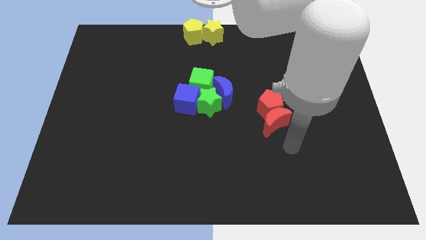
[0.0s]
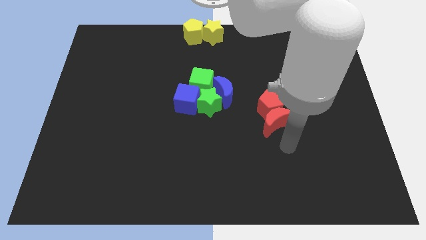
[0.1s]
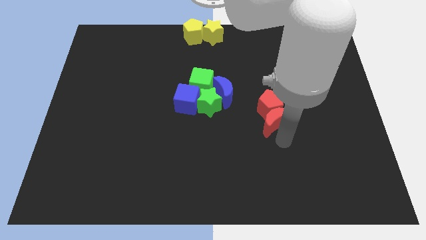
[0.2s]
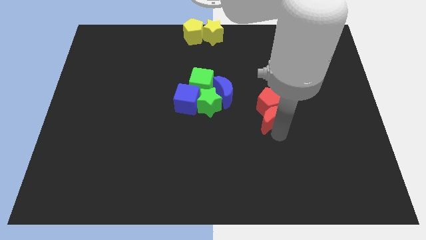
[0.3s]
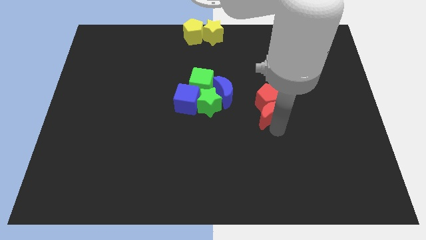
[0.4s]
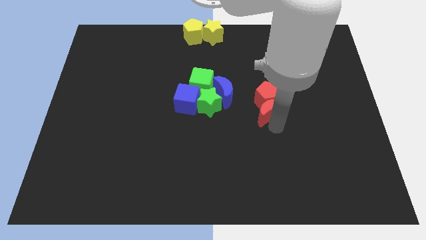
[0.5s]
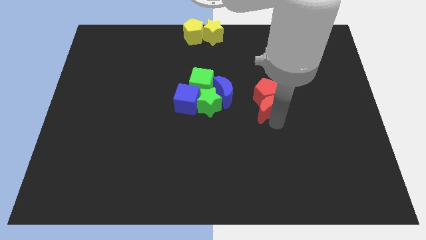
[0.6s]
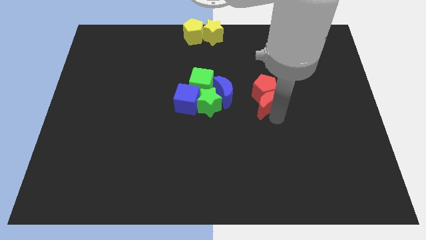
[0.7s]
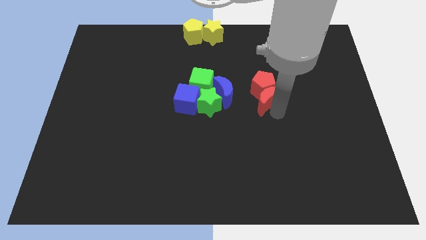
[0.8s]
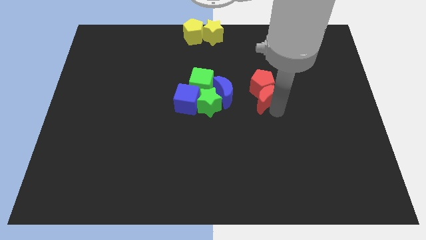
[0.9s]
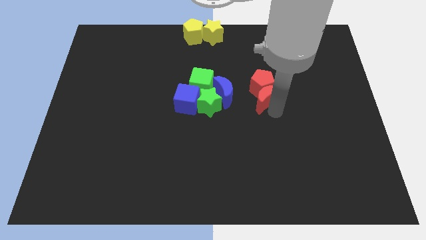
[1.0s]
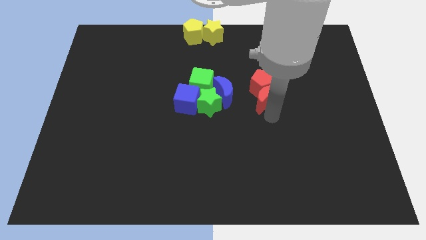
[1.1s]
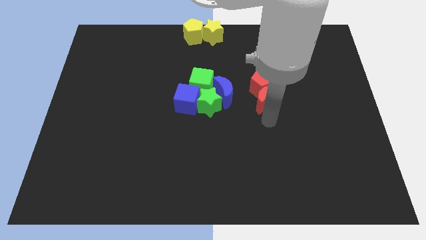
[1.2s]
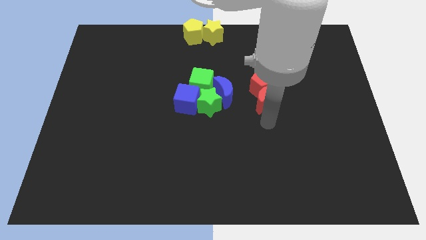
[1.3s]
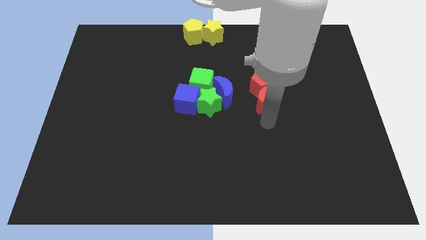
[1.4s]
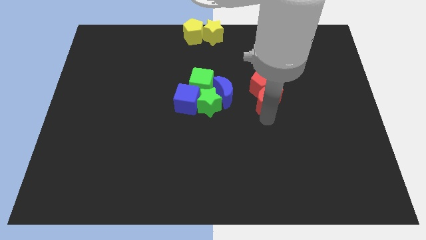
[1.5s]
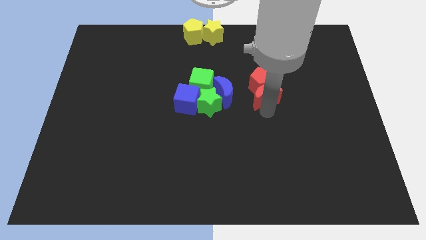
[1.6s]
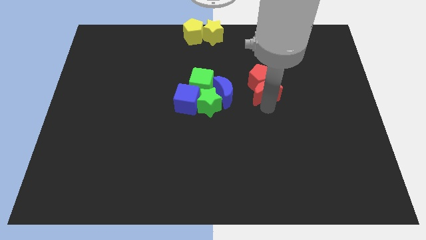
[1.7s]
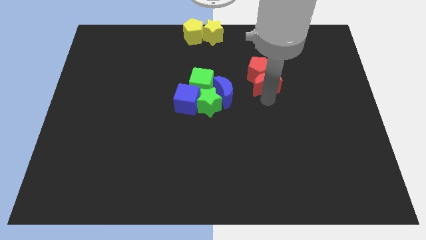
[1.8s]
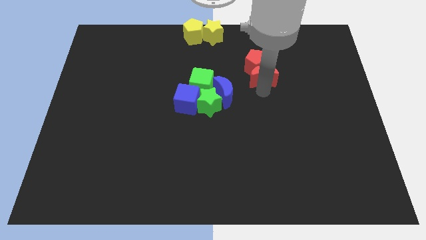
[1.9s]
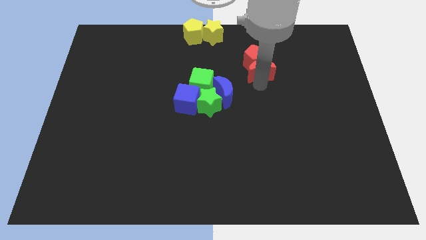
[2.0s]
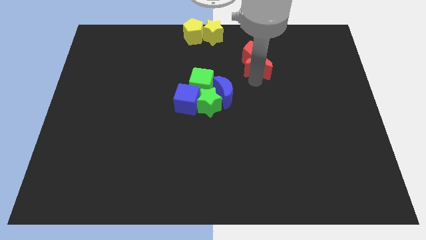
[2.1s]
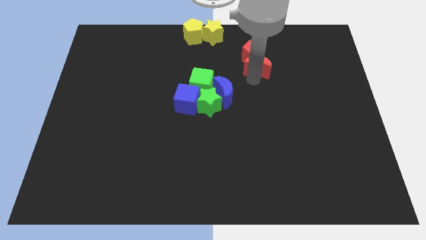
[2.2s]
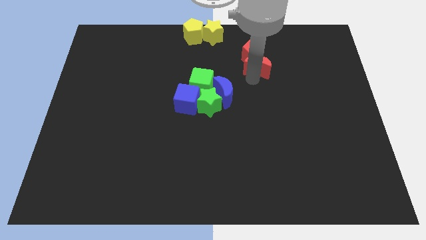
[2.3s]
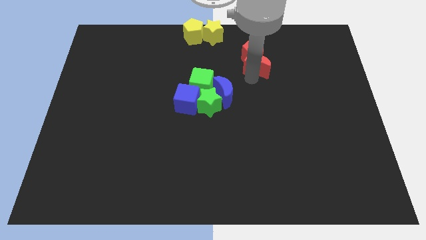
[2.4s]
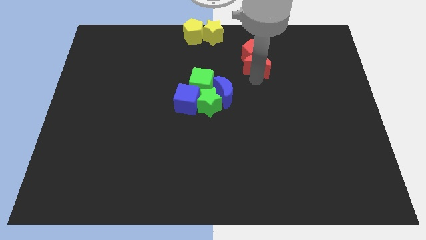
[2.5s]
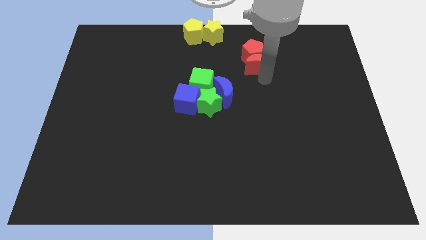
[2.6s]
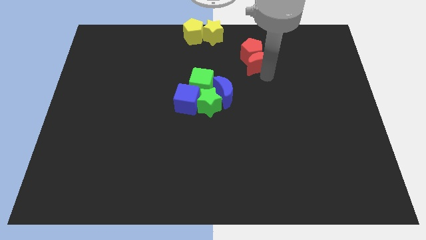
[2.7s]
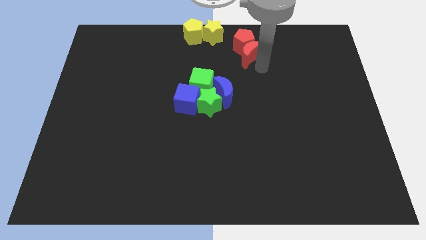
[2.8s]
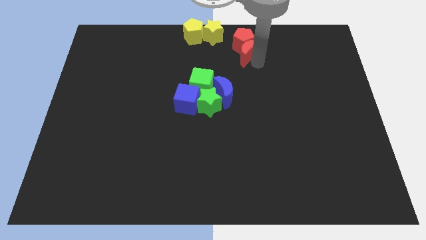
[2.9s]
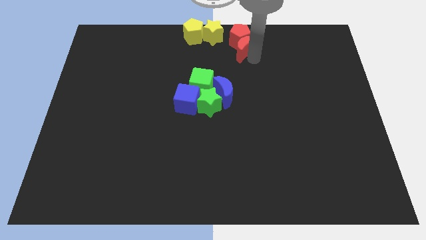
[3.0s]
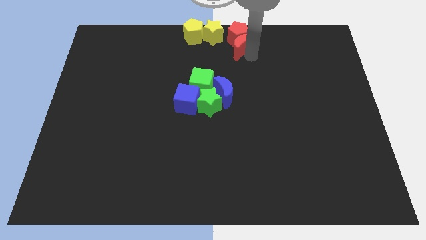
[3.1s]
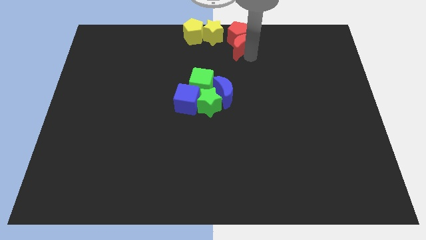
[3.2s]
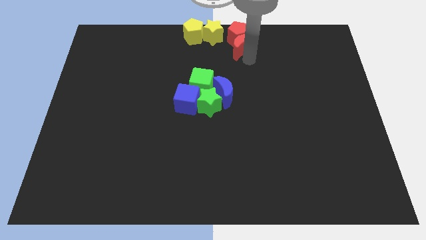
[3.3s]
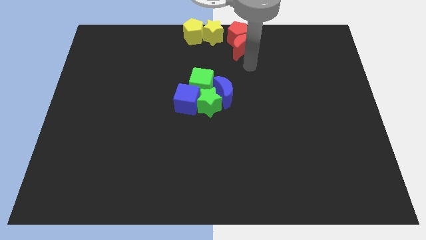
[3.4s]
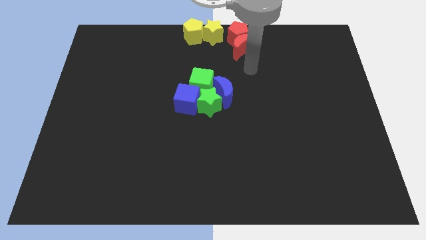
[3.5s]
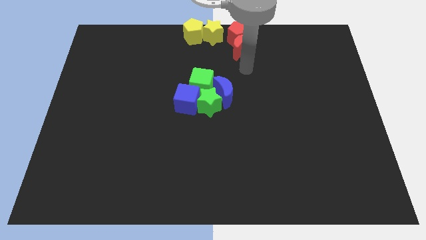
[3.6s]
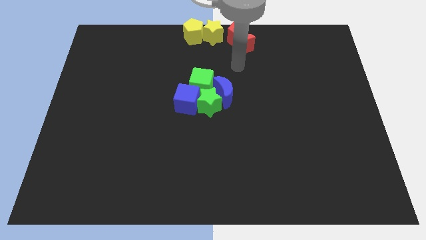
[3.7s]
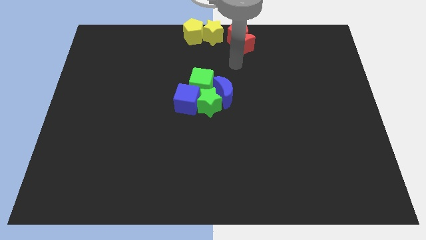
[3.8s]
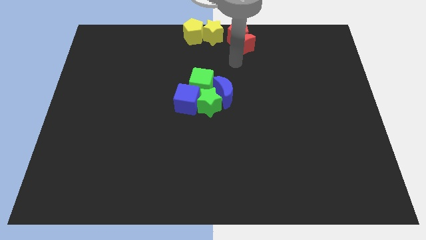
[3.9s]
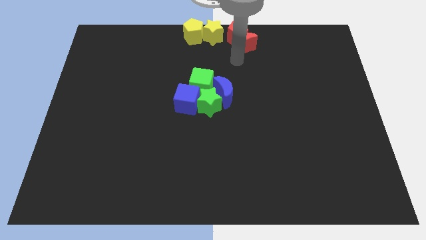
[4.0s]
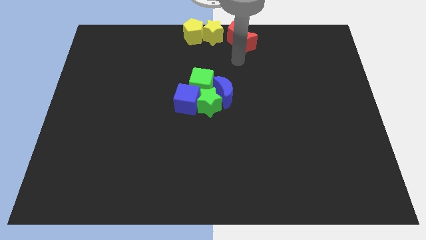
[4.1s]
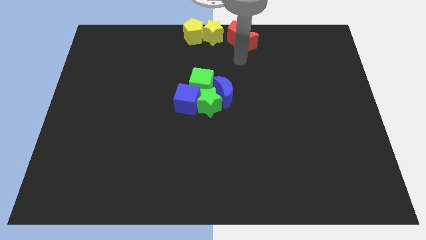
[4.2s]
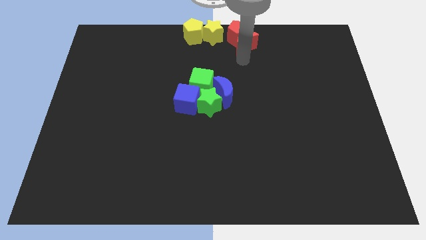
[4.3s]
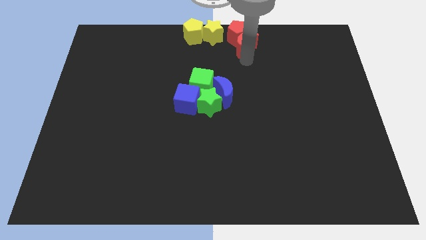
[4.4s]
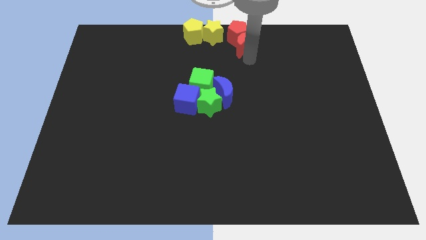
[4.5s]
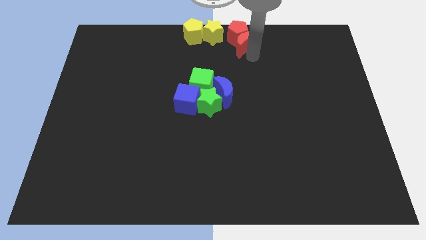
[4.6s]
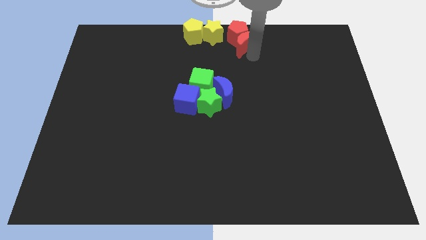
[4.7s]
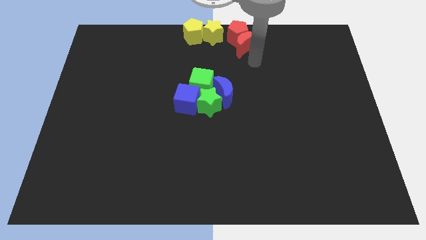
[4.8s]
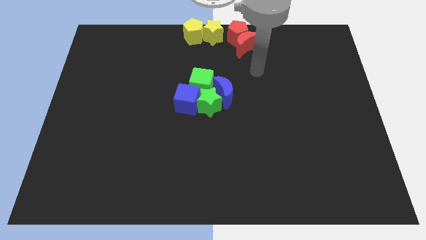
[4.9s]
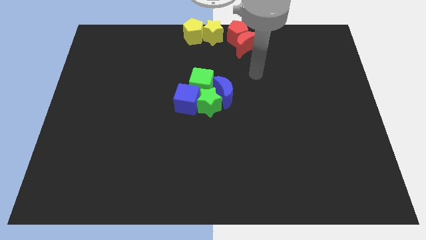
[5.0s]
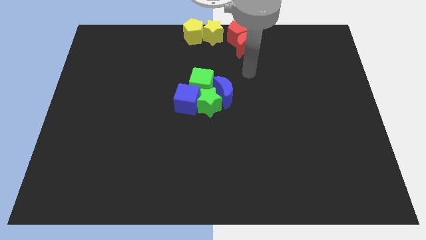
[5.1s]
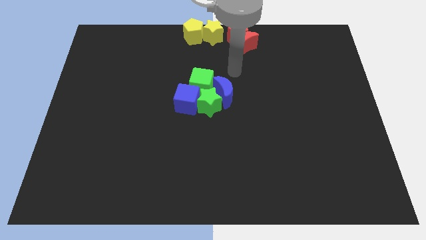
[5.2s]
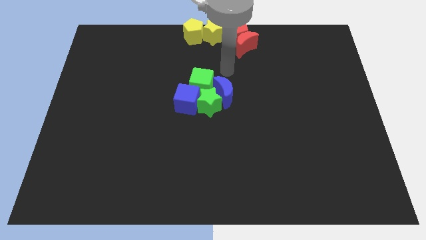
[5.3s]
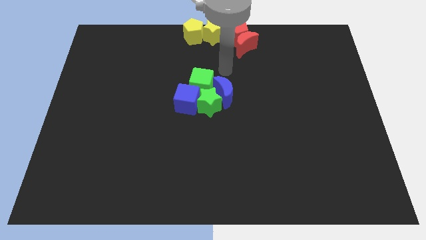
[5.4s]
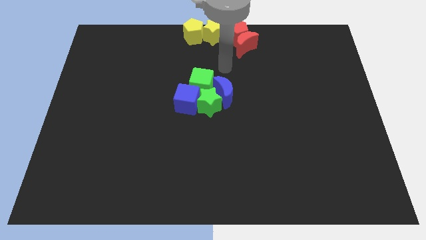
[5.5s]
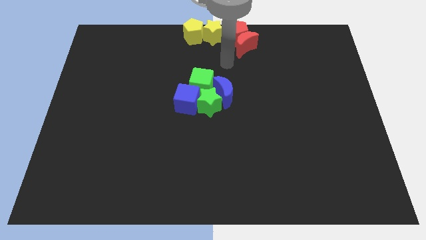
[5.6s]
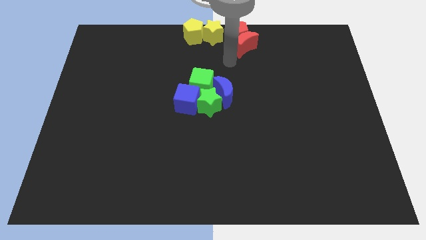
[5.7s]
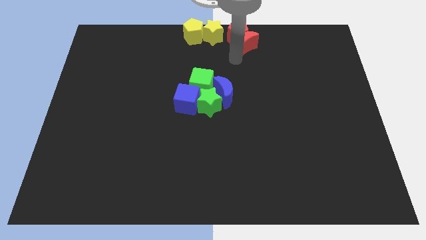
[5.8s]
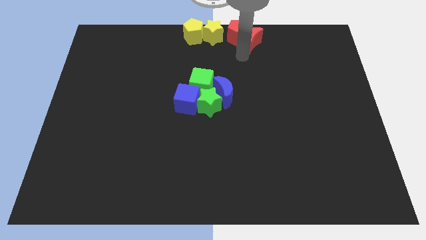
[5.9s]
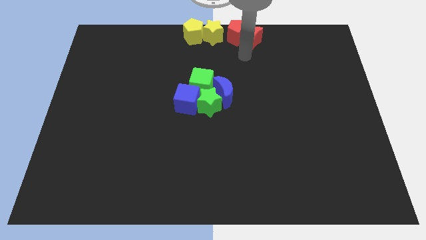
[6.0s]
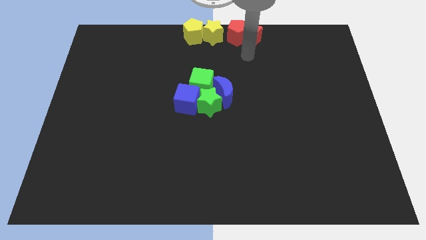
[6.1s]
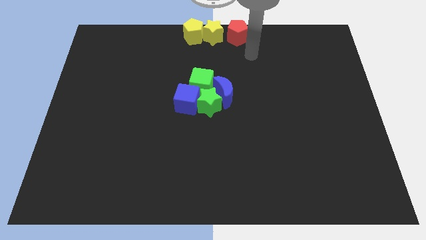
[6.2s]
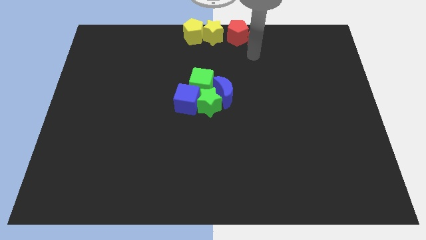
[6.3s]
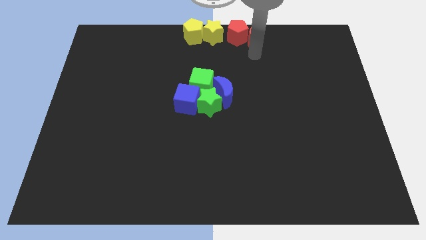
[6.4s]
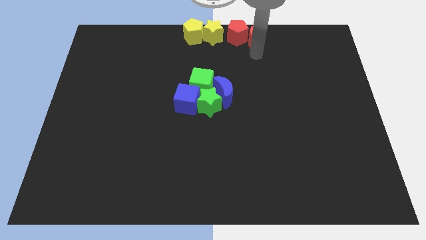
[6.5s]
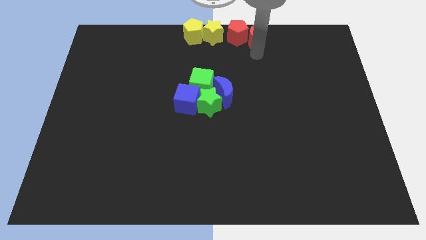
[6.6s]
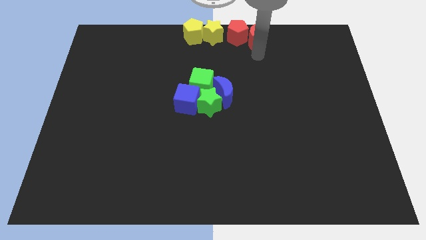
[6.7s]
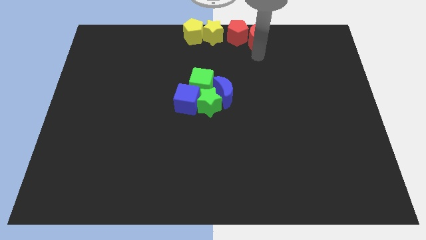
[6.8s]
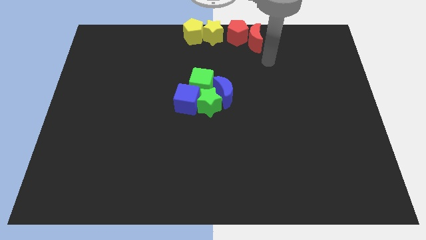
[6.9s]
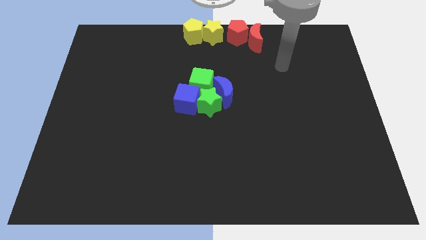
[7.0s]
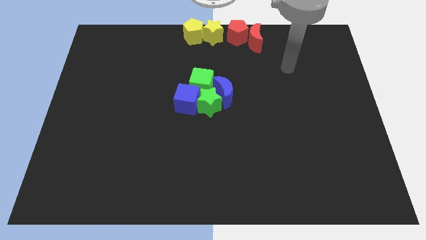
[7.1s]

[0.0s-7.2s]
move red pentagon and red moon to the right of yellow star

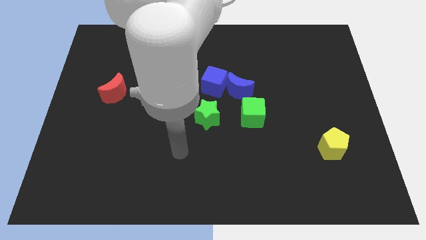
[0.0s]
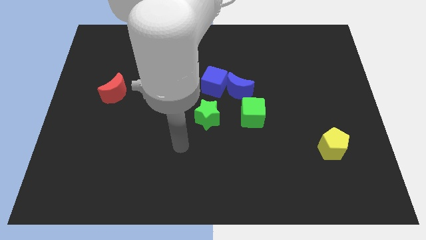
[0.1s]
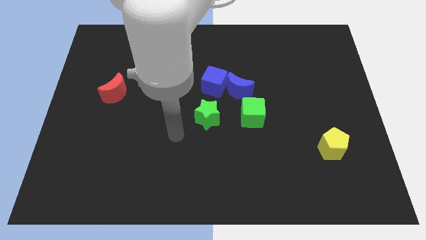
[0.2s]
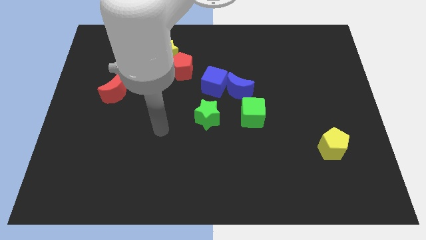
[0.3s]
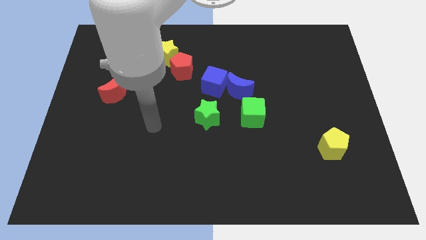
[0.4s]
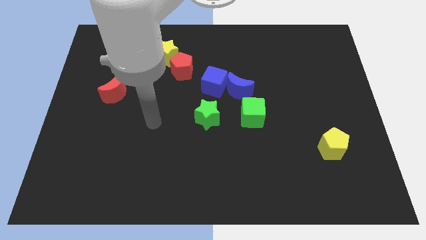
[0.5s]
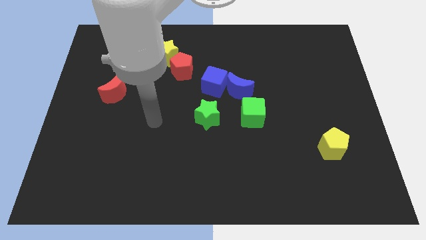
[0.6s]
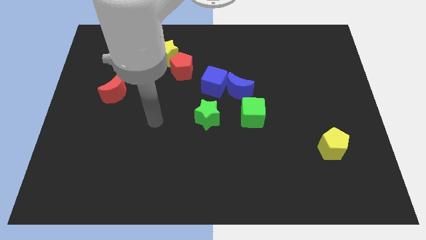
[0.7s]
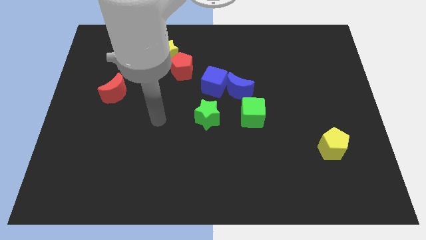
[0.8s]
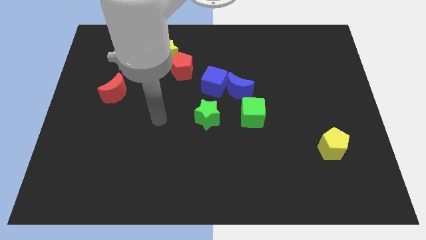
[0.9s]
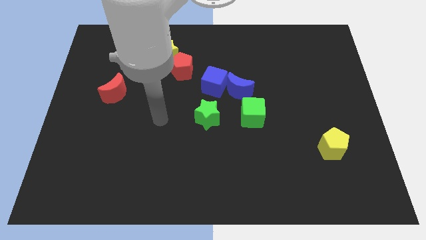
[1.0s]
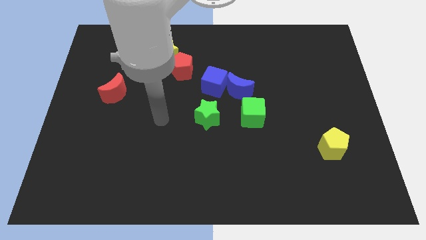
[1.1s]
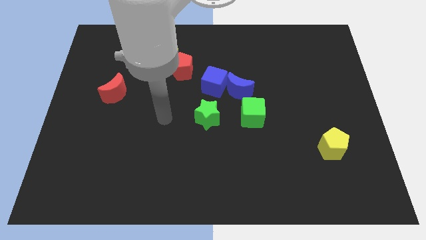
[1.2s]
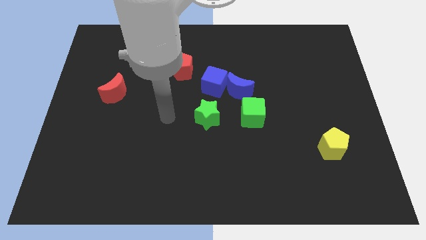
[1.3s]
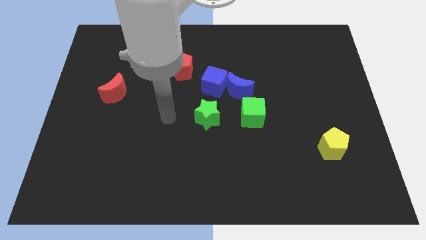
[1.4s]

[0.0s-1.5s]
point the arm to the left of the green star

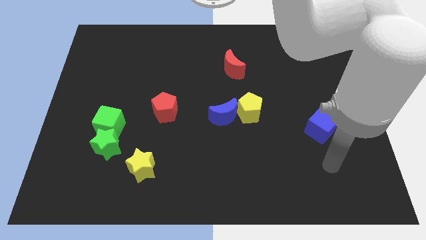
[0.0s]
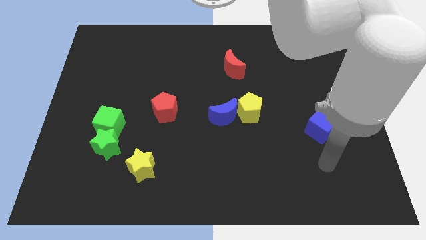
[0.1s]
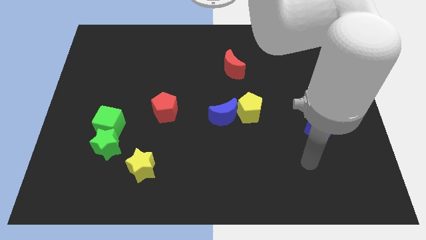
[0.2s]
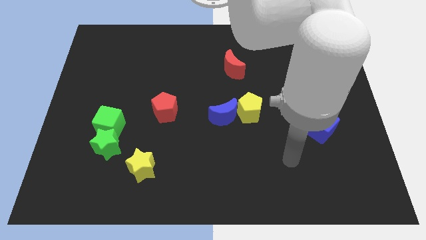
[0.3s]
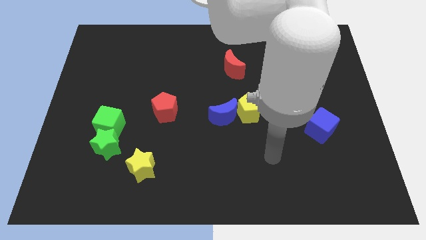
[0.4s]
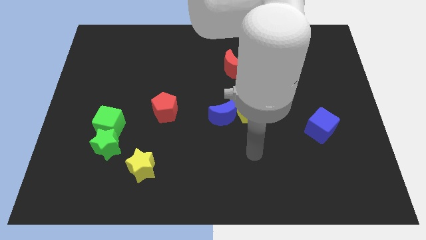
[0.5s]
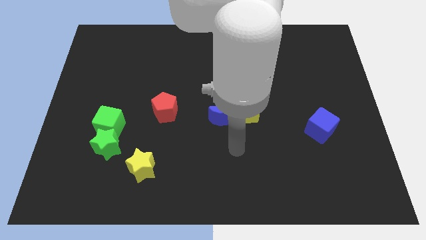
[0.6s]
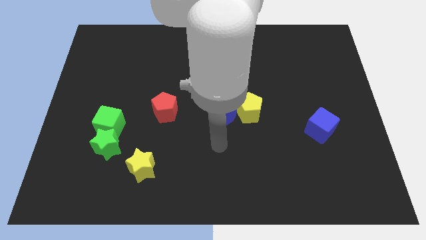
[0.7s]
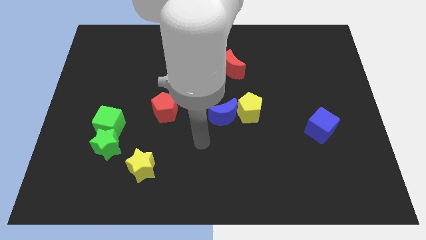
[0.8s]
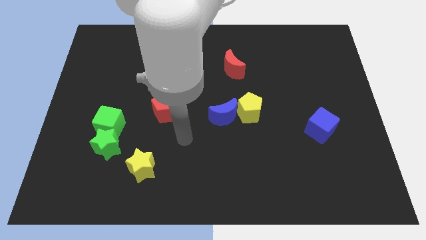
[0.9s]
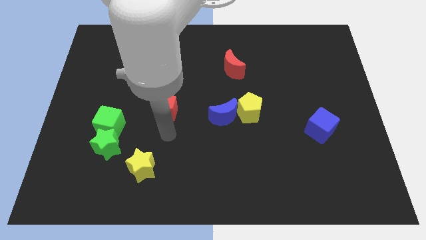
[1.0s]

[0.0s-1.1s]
point your arm at the bottom of the red pentagon
